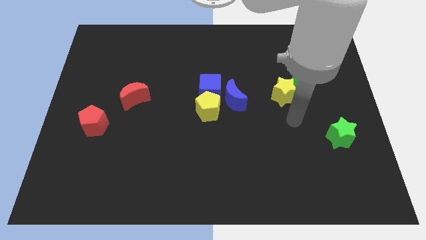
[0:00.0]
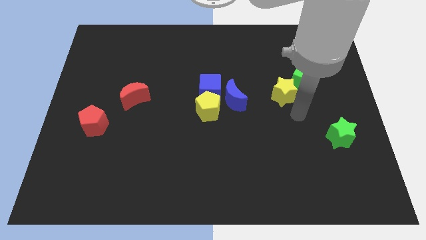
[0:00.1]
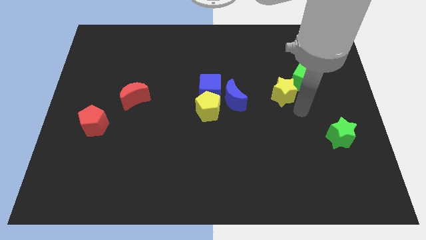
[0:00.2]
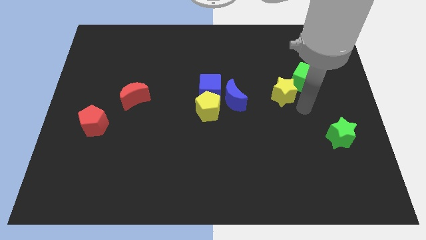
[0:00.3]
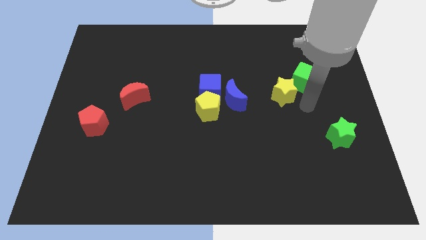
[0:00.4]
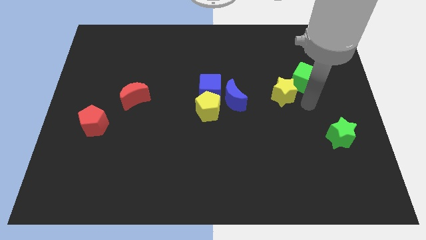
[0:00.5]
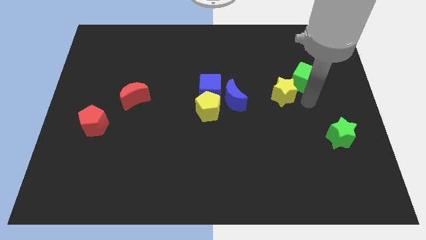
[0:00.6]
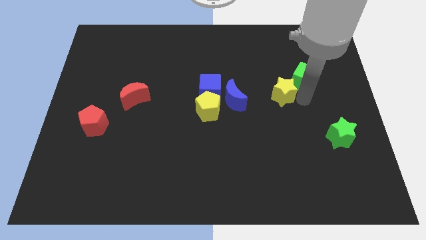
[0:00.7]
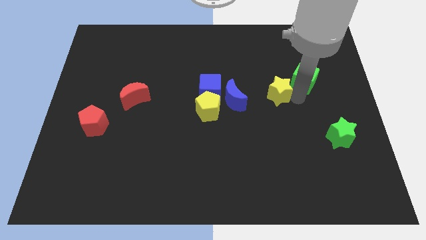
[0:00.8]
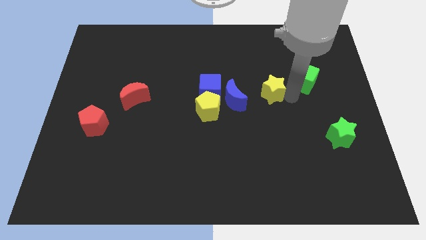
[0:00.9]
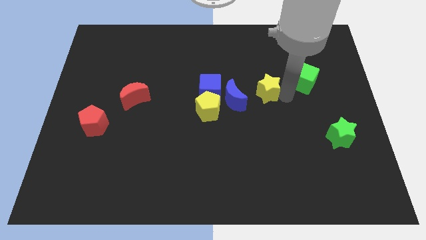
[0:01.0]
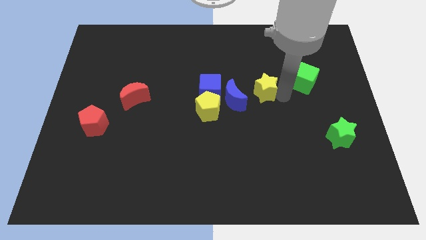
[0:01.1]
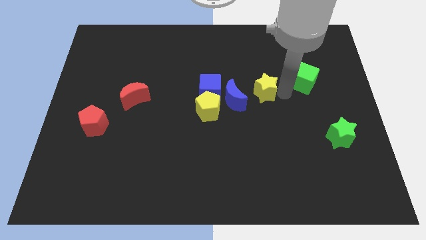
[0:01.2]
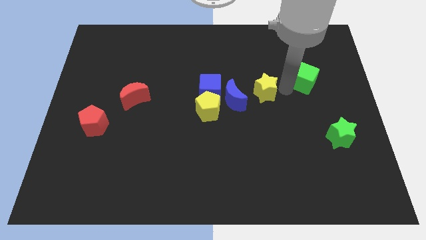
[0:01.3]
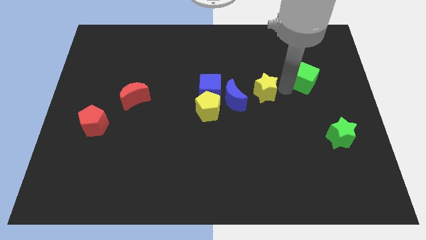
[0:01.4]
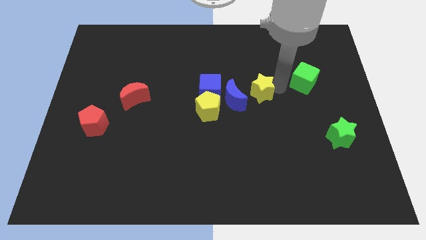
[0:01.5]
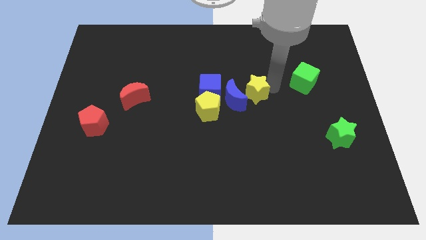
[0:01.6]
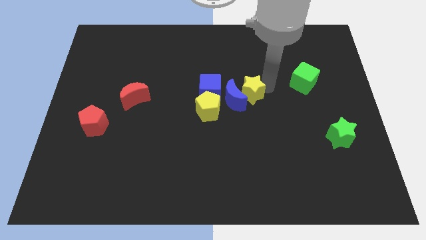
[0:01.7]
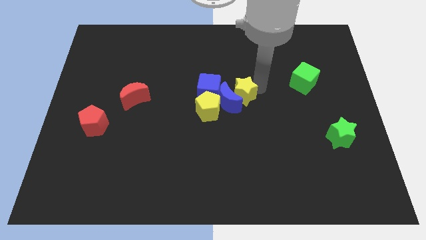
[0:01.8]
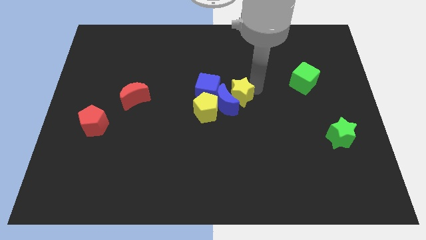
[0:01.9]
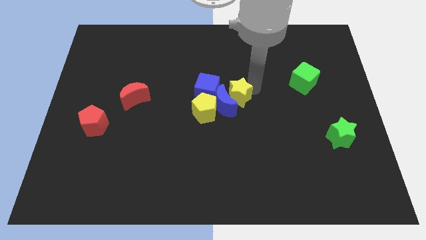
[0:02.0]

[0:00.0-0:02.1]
make a group out of blue blocks and yellow blocks

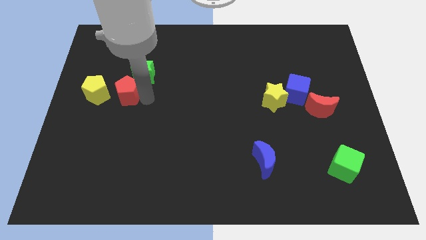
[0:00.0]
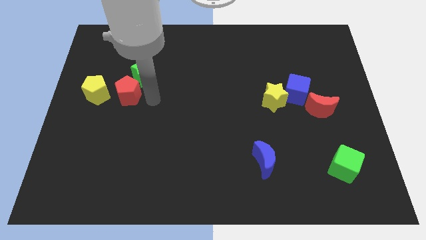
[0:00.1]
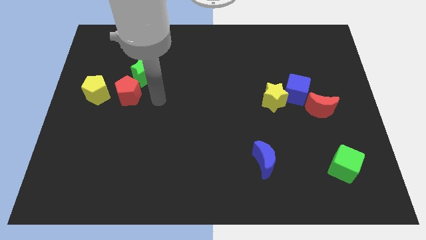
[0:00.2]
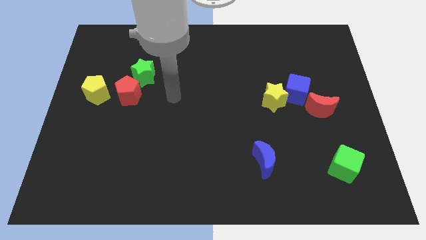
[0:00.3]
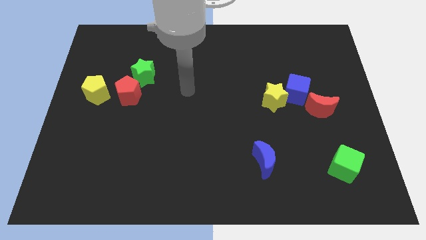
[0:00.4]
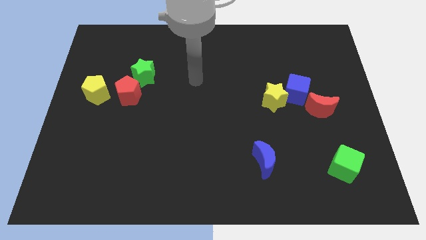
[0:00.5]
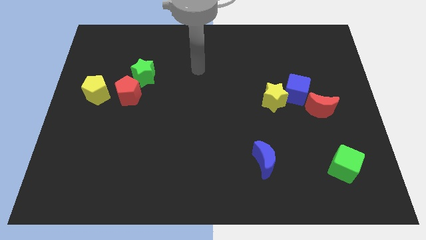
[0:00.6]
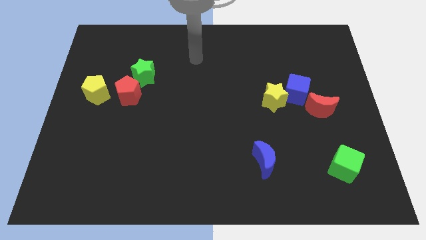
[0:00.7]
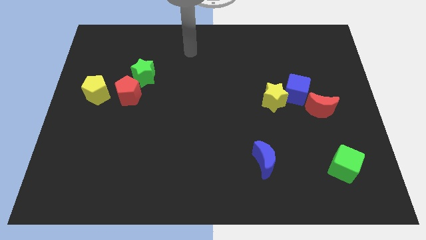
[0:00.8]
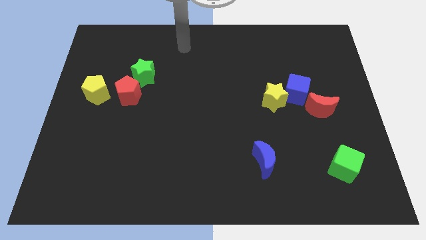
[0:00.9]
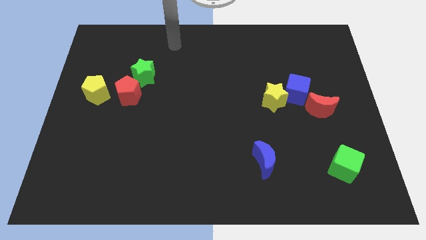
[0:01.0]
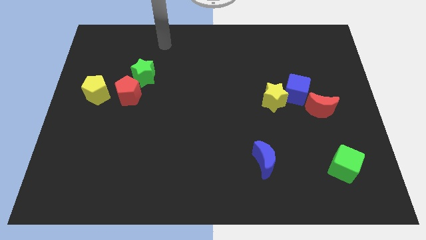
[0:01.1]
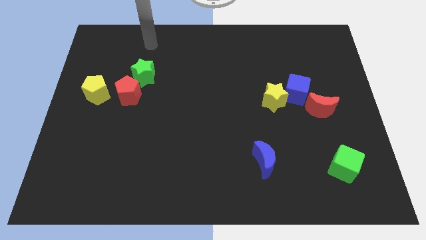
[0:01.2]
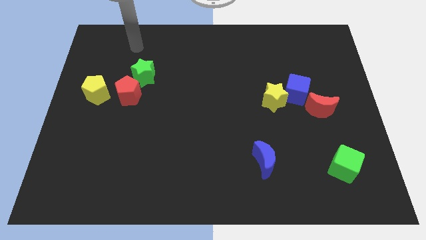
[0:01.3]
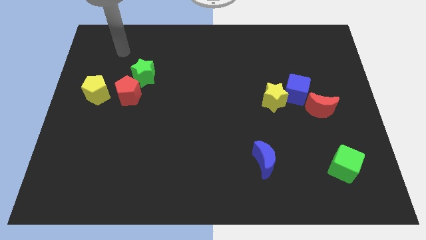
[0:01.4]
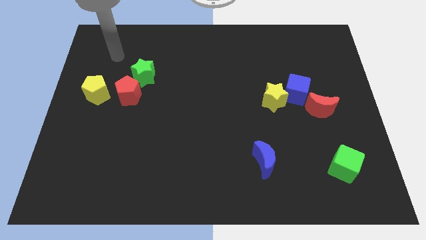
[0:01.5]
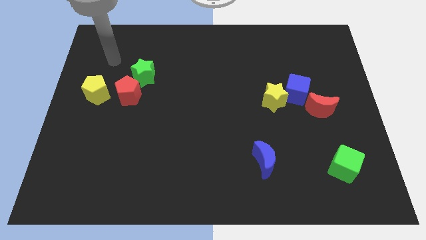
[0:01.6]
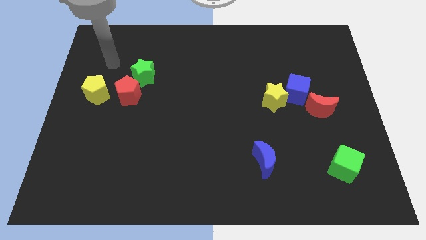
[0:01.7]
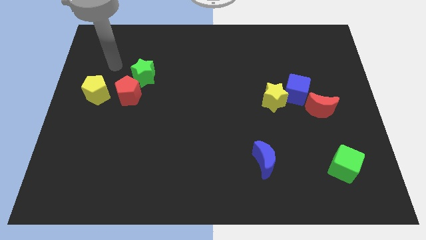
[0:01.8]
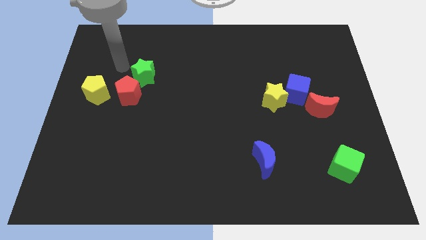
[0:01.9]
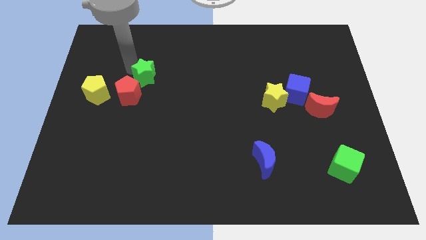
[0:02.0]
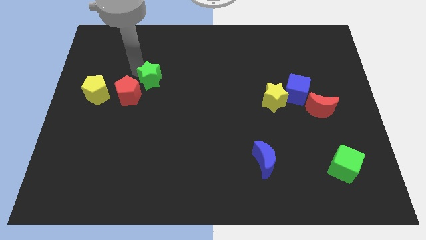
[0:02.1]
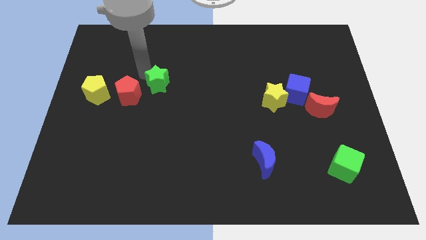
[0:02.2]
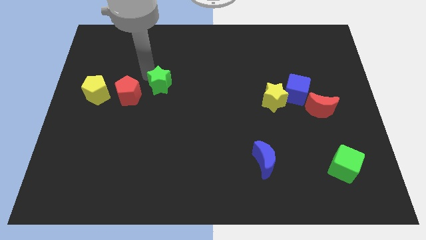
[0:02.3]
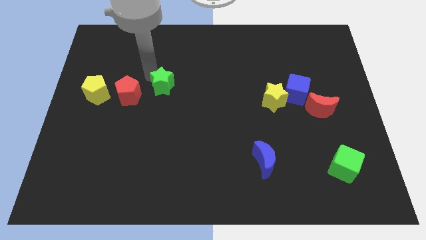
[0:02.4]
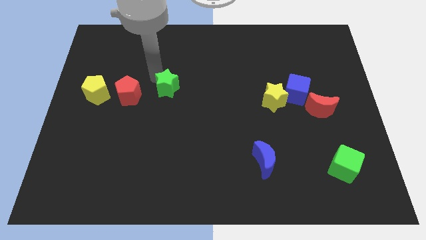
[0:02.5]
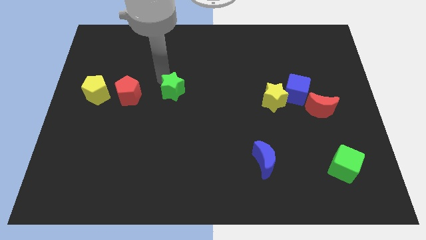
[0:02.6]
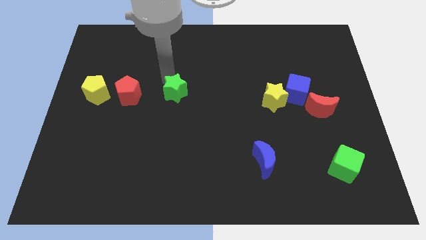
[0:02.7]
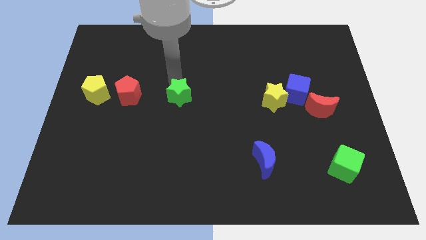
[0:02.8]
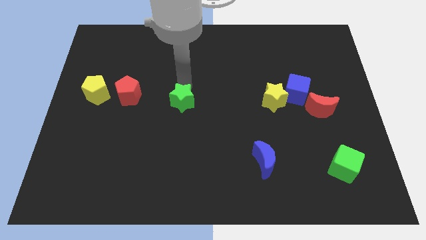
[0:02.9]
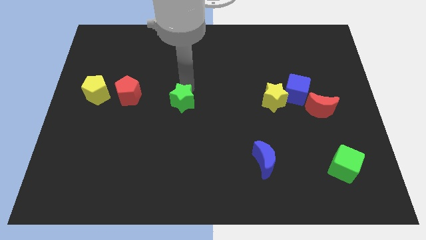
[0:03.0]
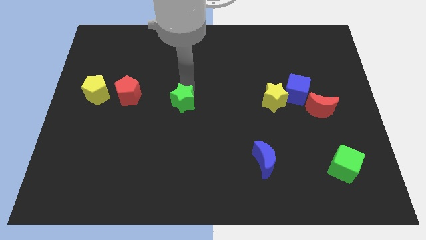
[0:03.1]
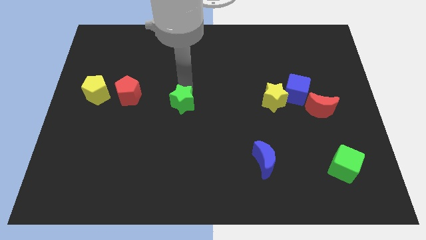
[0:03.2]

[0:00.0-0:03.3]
push the green star towards the bottom side of the board

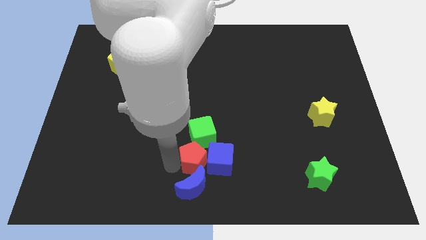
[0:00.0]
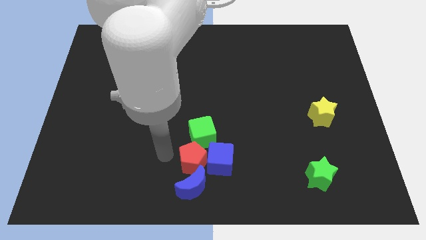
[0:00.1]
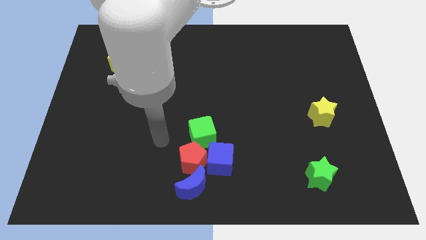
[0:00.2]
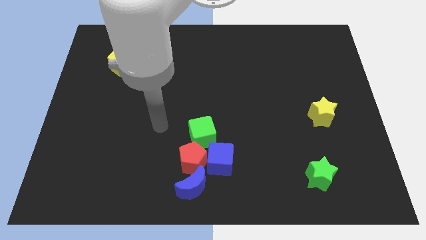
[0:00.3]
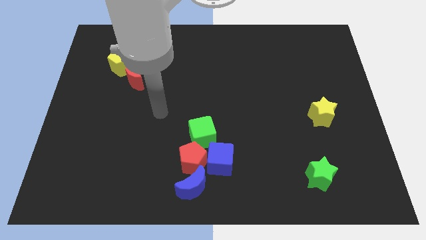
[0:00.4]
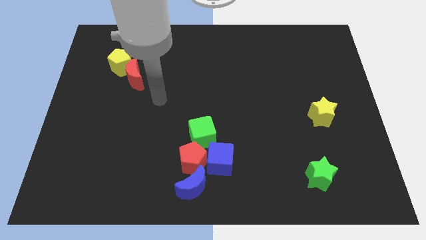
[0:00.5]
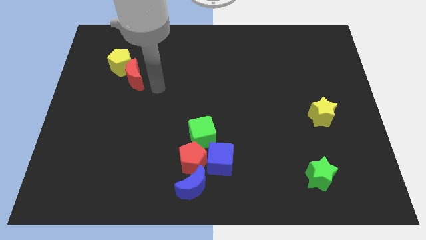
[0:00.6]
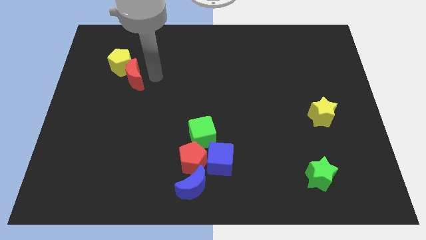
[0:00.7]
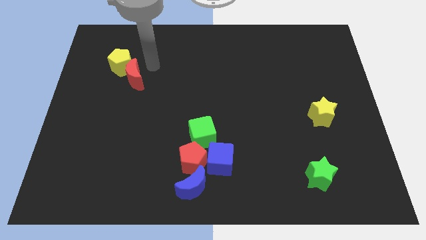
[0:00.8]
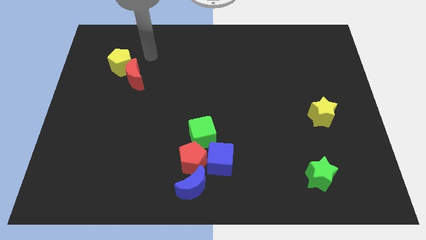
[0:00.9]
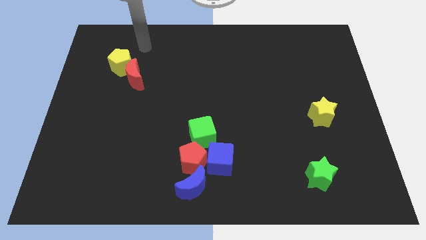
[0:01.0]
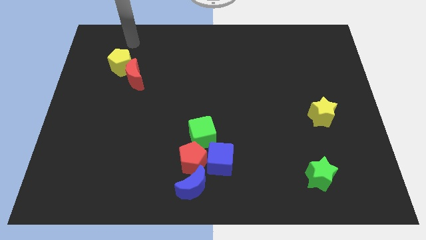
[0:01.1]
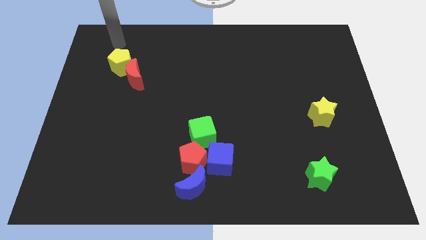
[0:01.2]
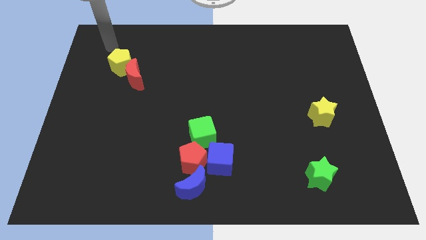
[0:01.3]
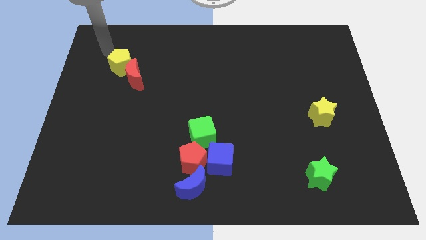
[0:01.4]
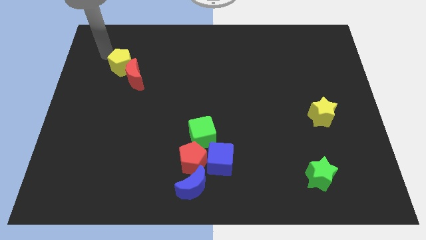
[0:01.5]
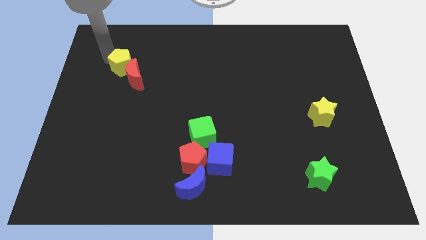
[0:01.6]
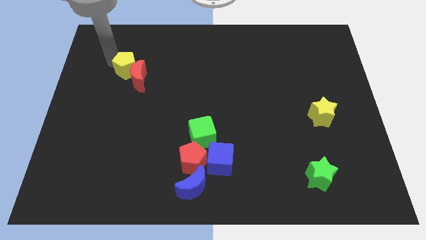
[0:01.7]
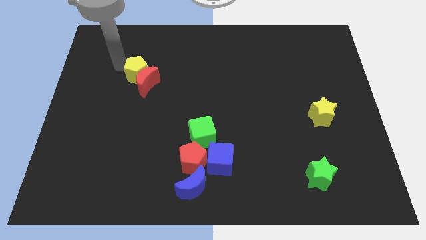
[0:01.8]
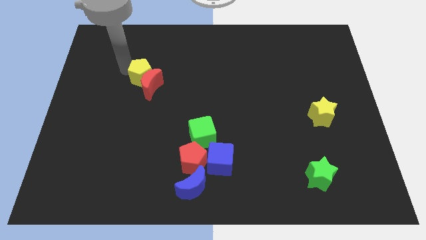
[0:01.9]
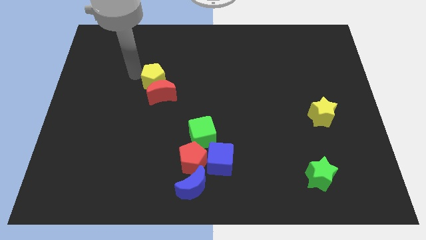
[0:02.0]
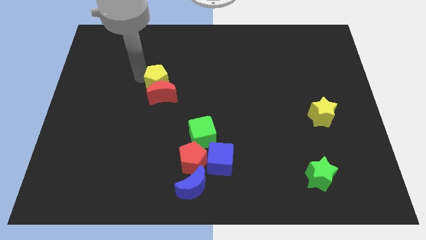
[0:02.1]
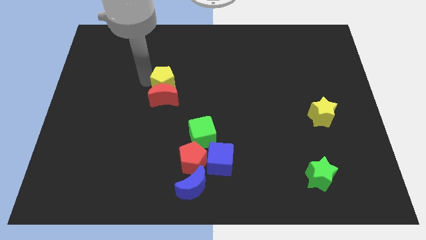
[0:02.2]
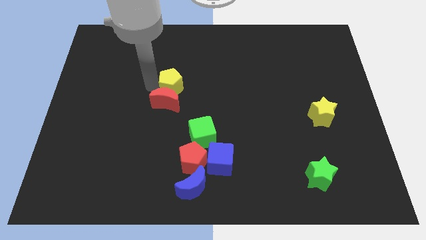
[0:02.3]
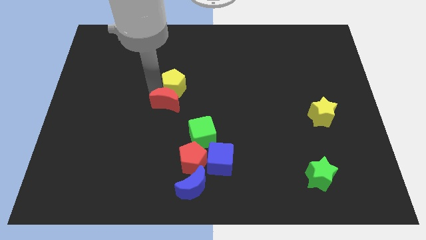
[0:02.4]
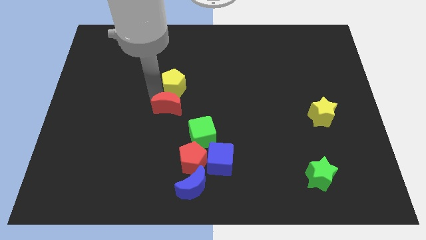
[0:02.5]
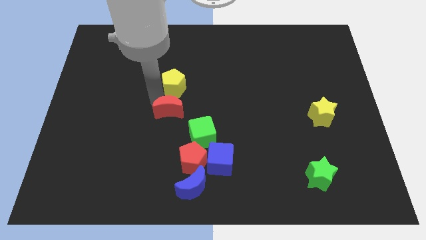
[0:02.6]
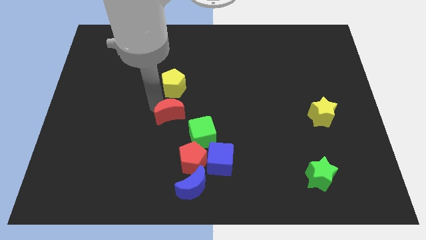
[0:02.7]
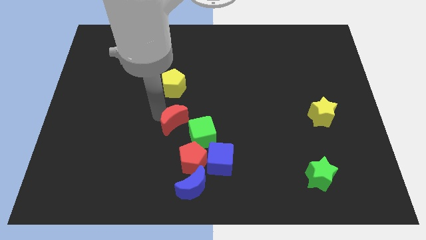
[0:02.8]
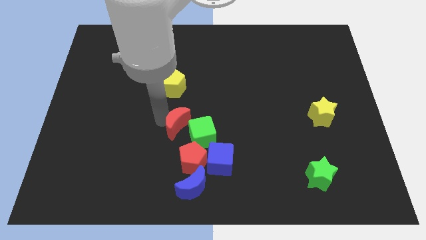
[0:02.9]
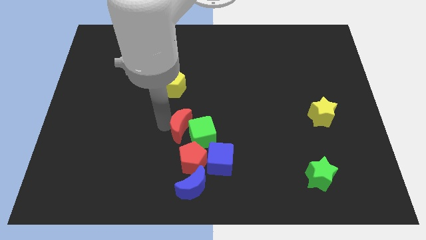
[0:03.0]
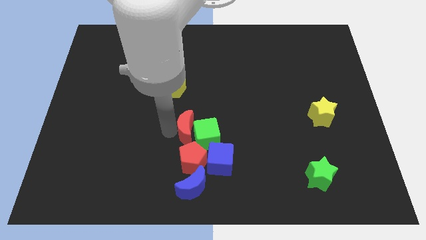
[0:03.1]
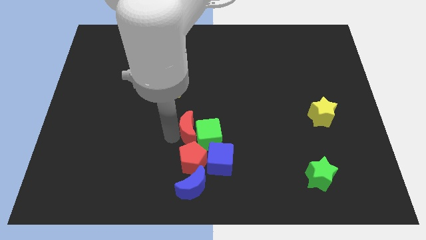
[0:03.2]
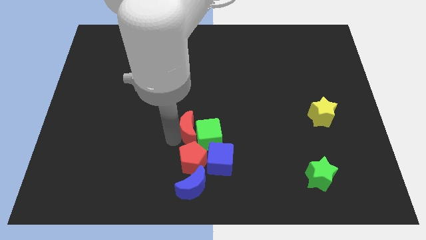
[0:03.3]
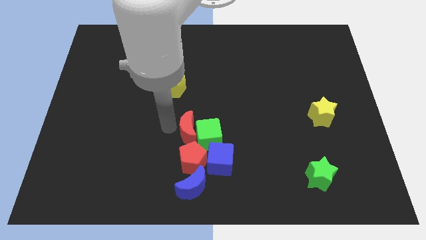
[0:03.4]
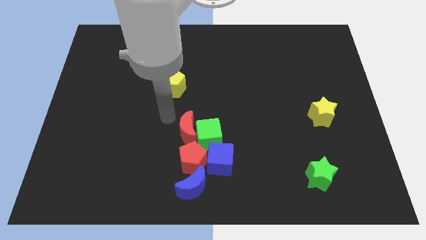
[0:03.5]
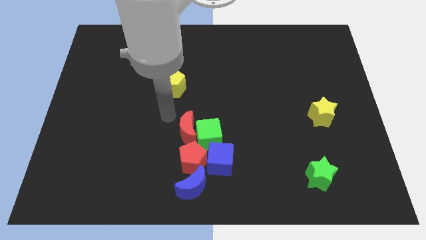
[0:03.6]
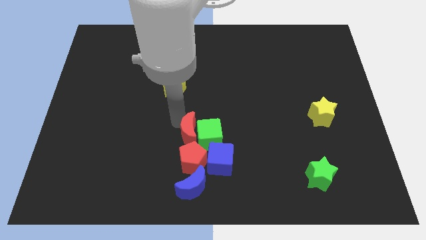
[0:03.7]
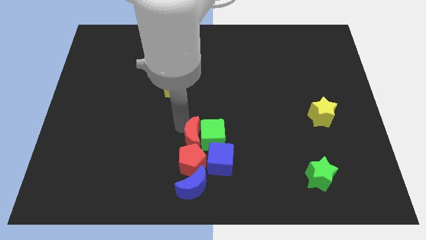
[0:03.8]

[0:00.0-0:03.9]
move red moon into the green cube
